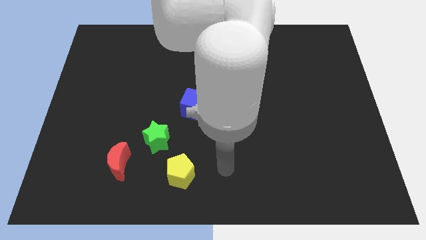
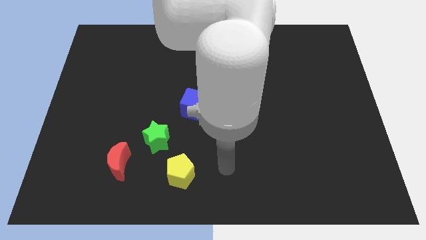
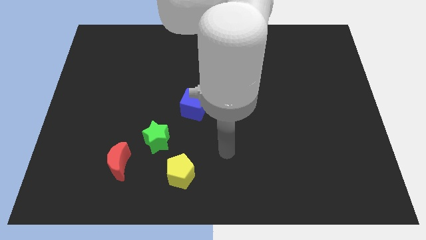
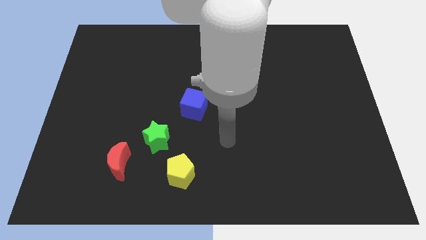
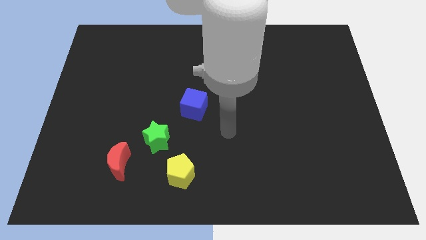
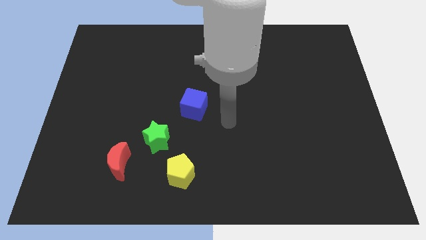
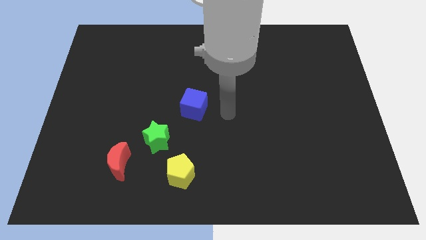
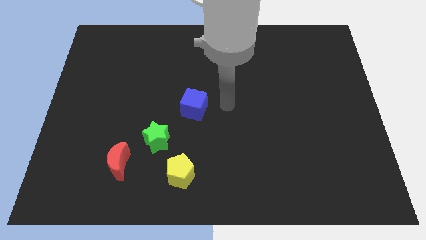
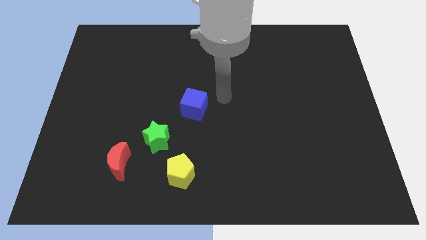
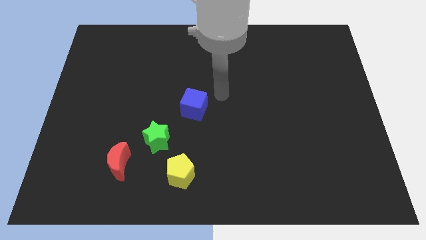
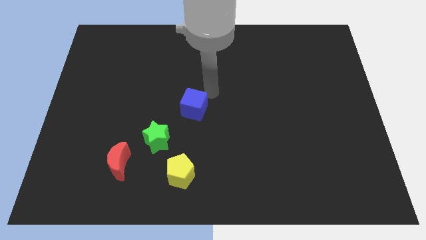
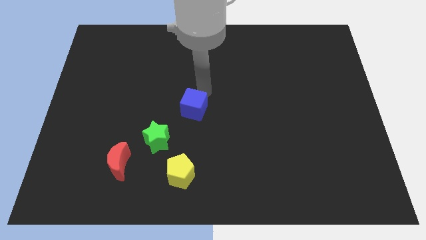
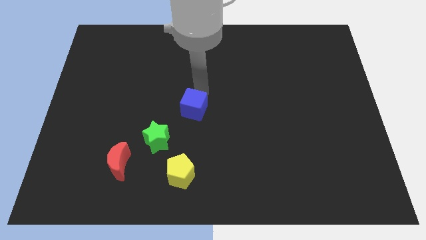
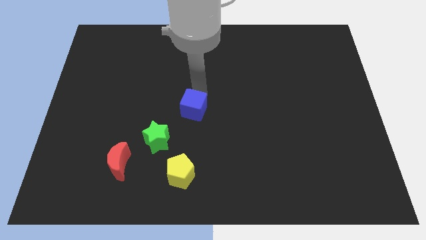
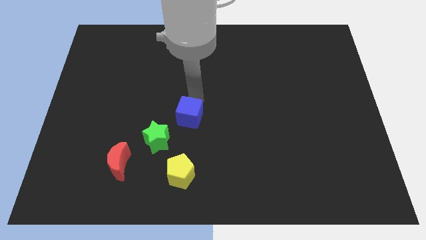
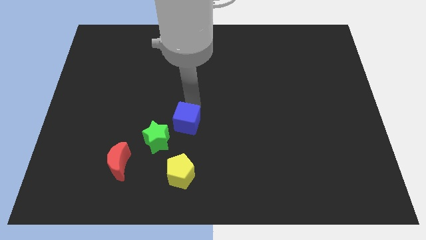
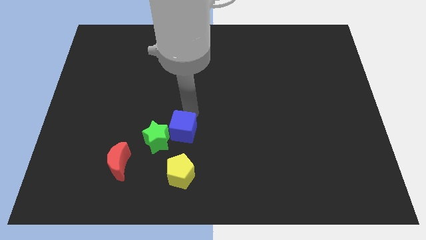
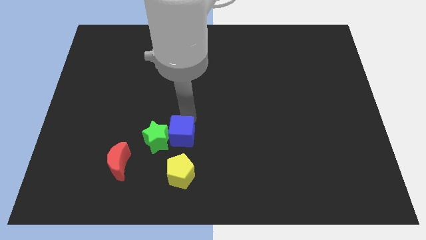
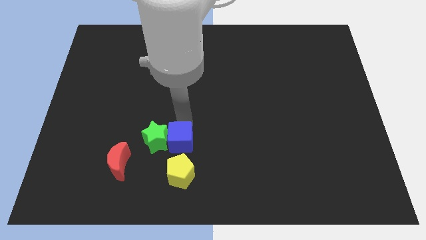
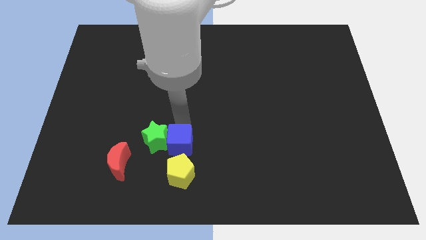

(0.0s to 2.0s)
move the blue cube close to the green block

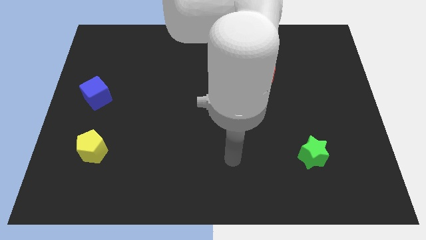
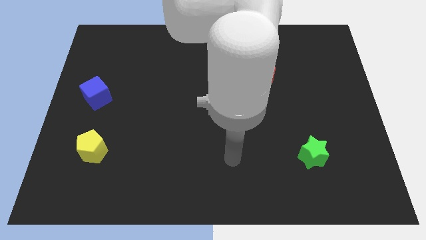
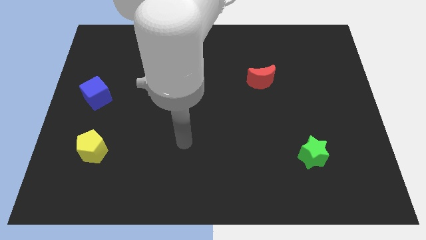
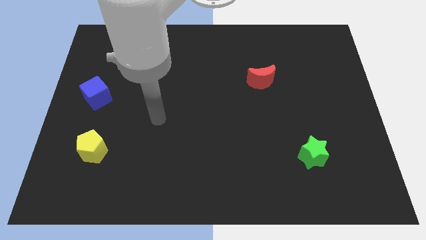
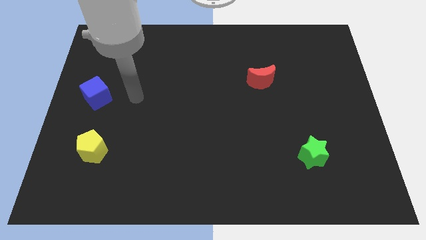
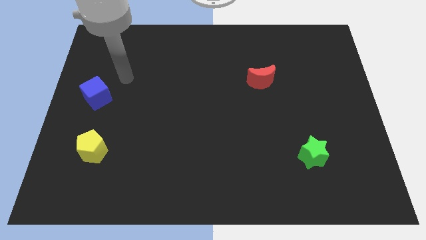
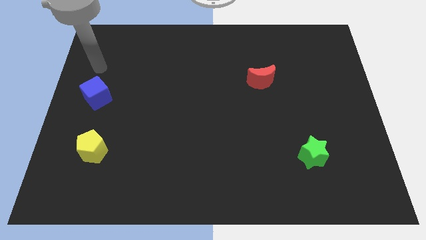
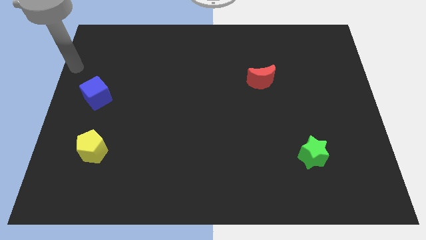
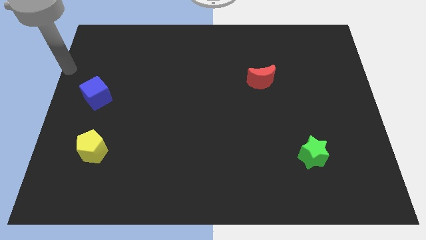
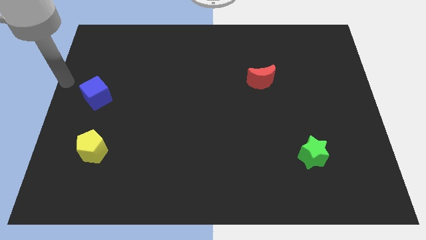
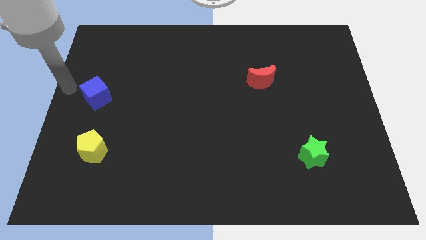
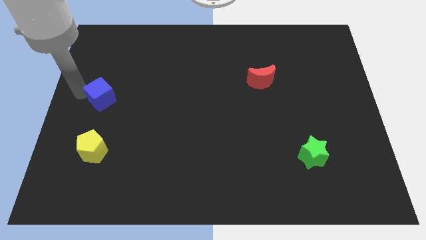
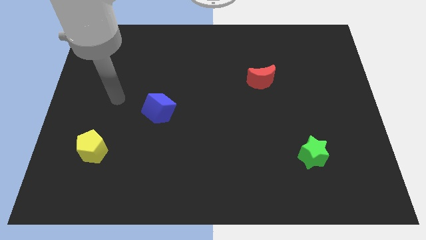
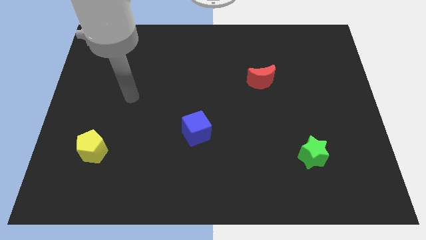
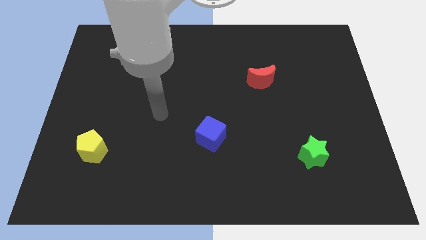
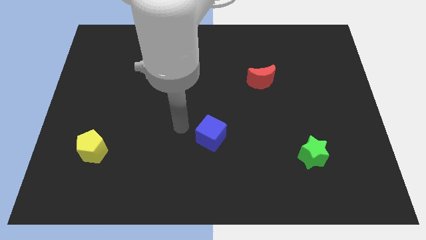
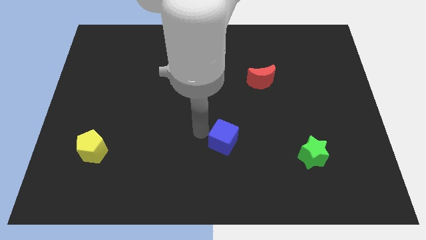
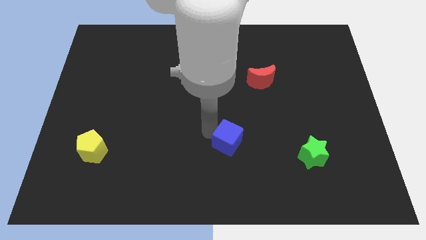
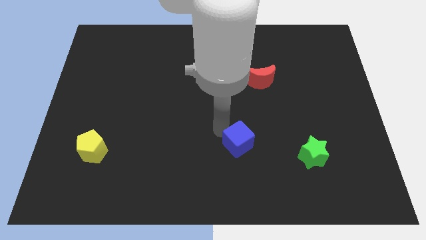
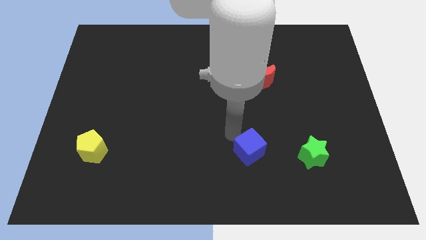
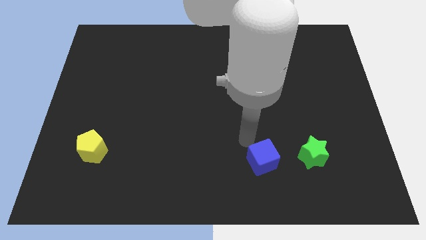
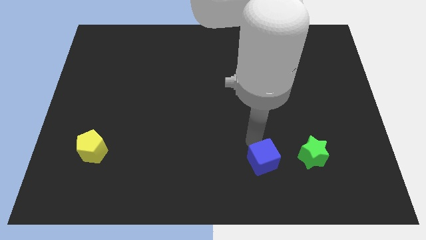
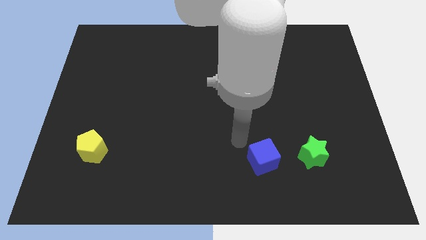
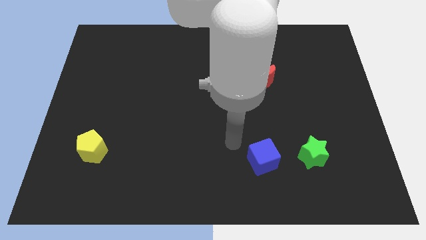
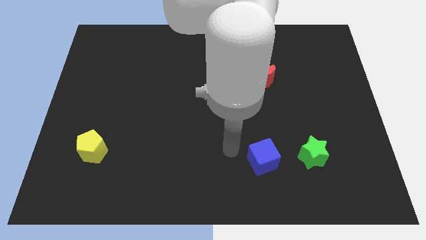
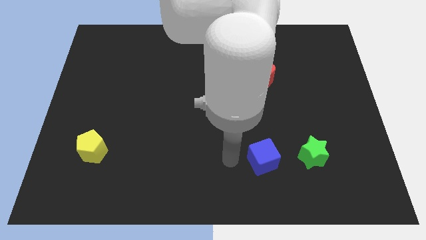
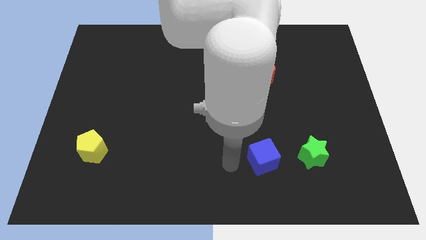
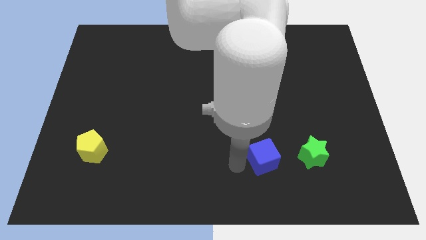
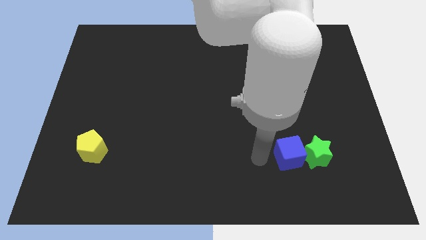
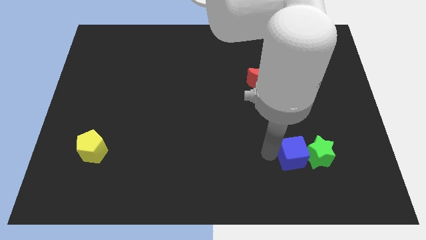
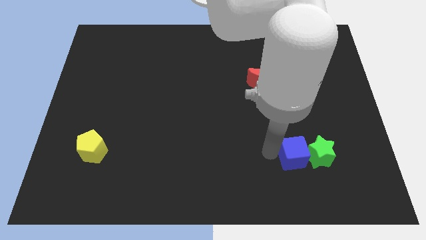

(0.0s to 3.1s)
move the blue block next to the green star

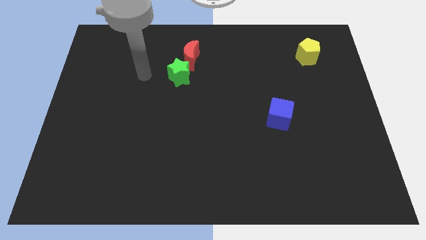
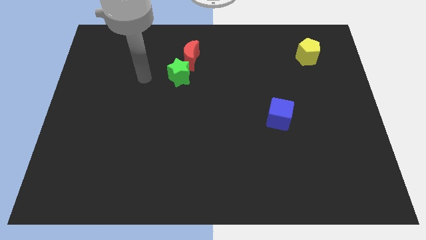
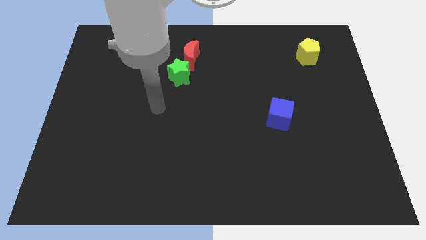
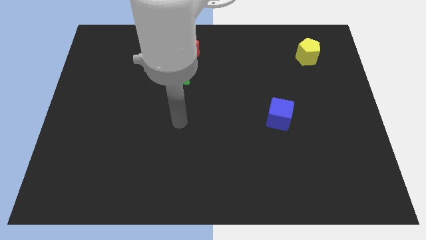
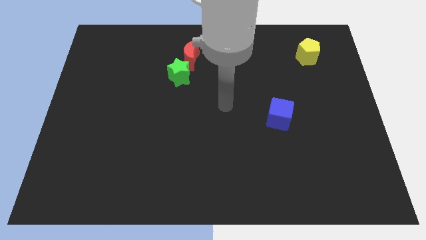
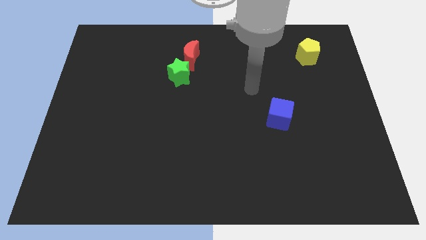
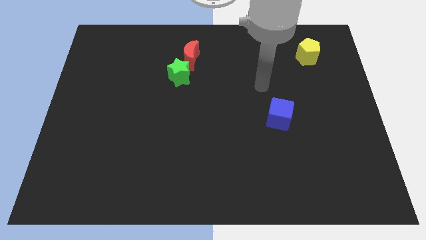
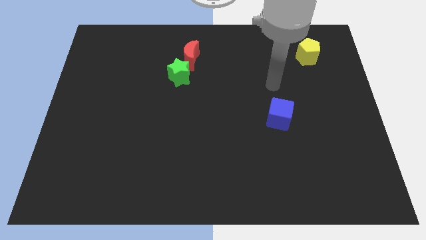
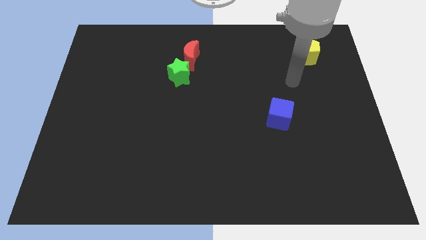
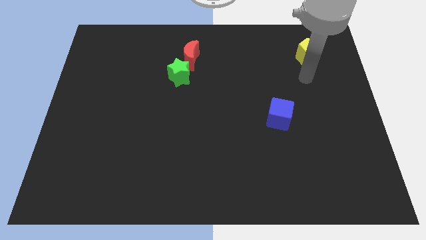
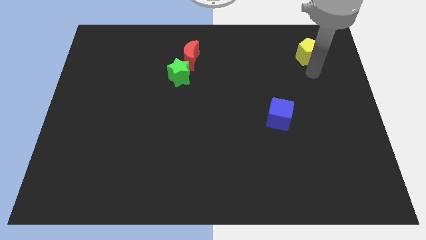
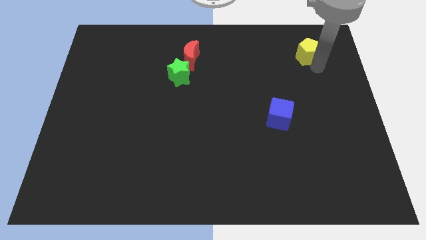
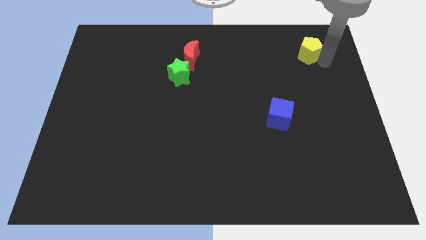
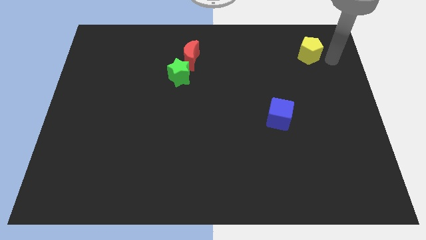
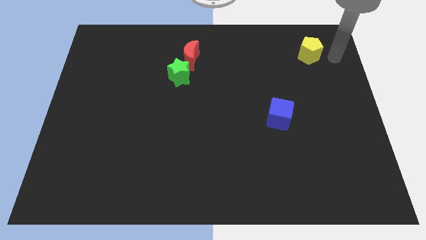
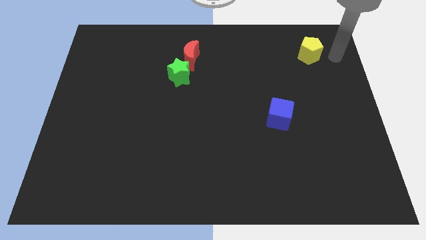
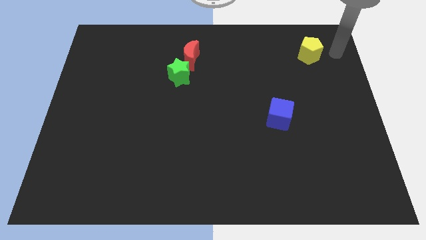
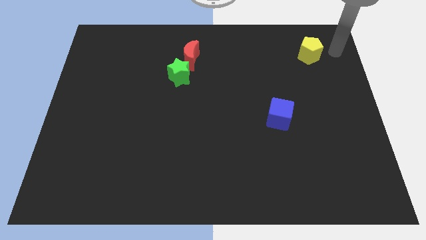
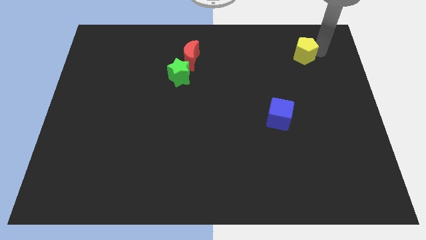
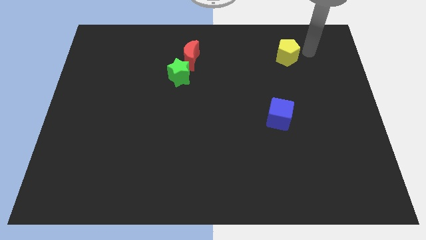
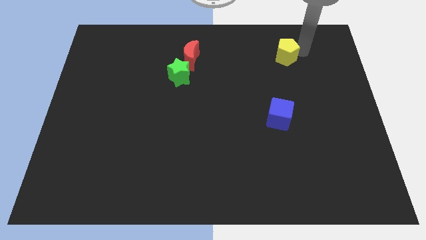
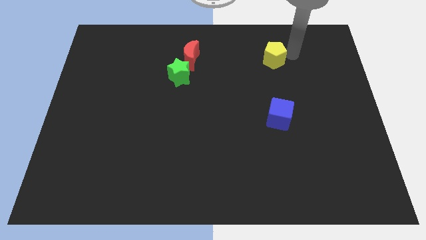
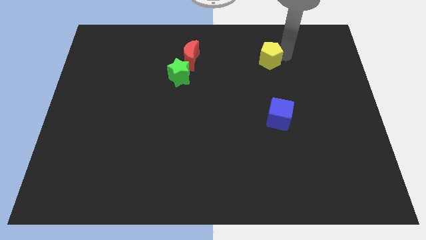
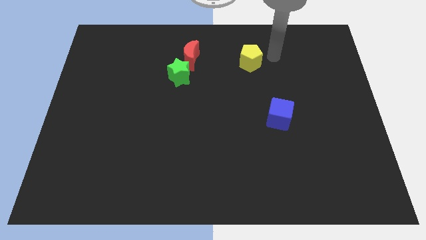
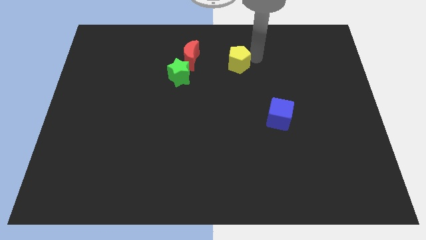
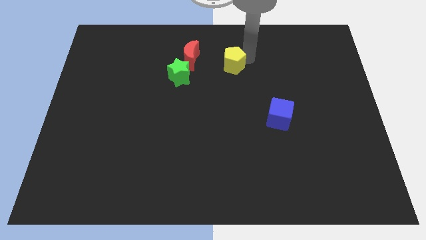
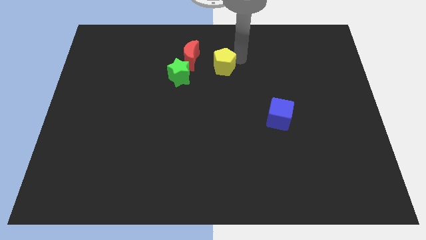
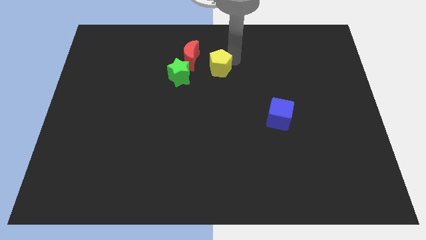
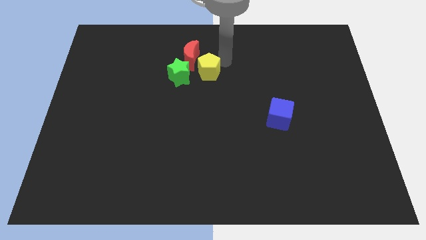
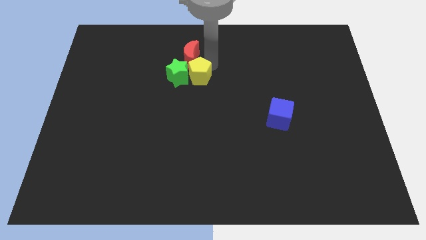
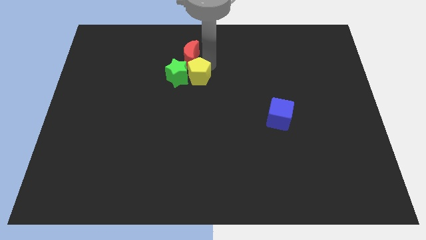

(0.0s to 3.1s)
push the yellow pentagon close to the star

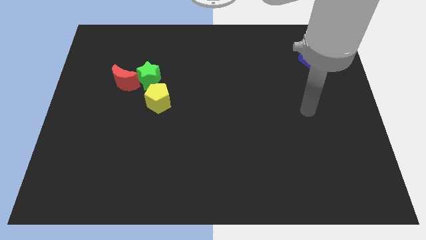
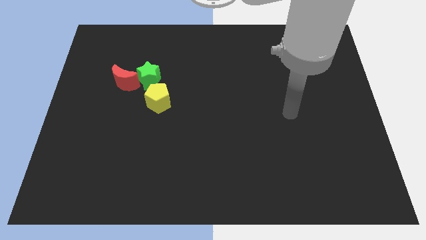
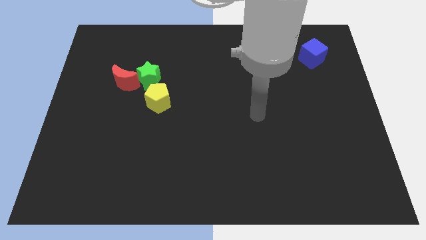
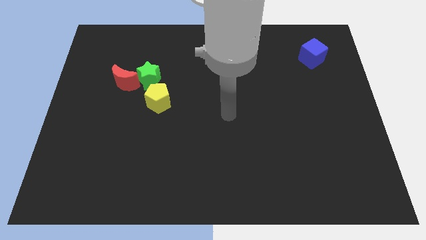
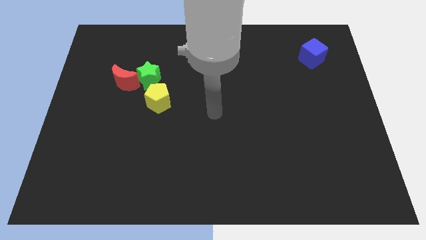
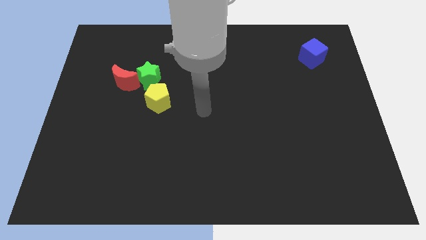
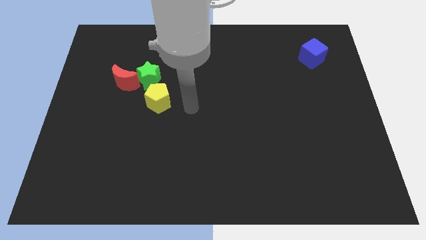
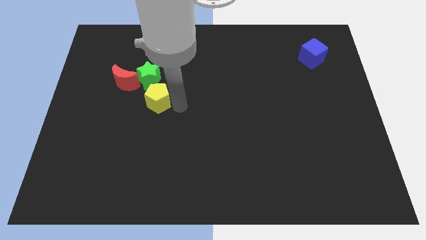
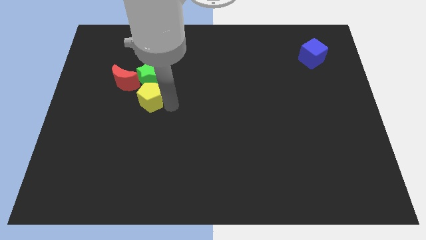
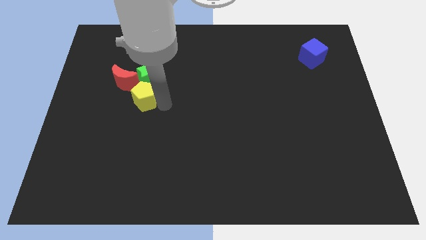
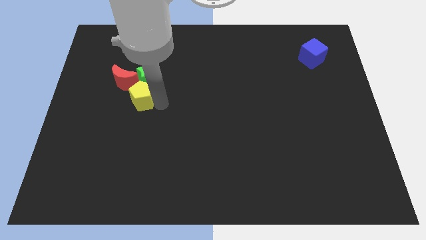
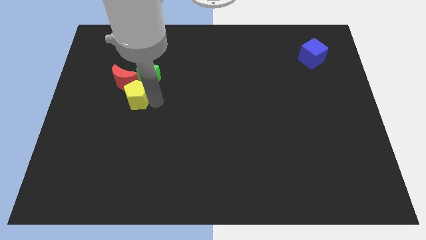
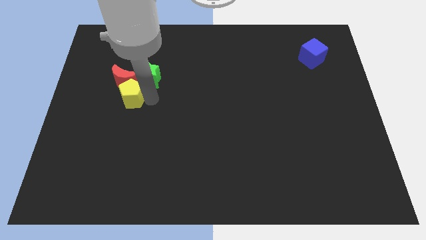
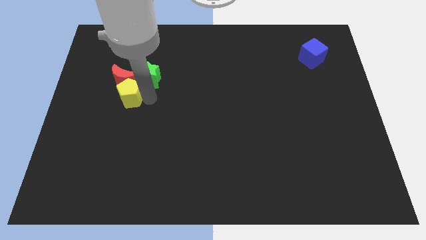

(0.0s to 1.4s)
move the yellow pentagon to the red block
